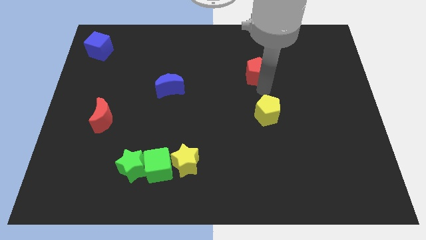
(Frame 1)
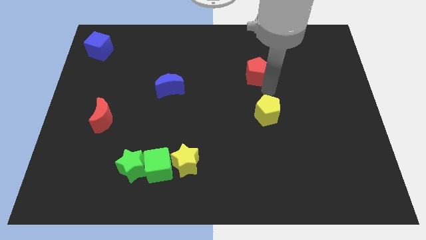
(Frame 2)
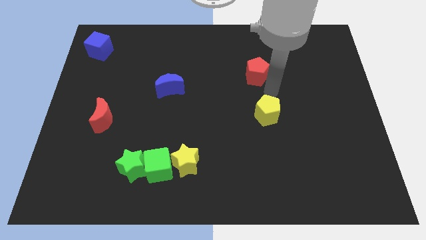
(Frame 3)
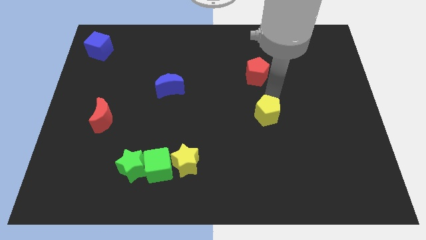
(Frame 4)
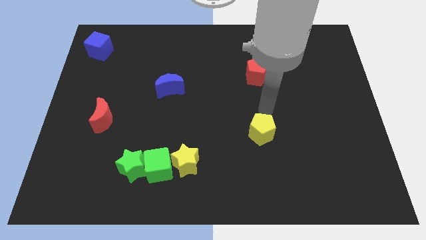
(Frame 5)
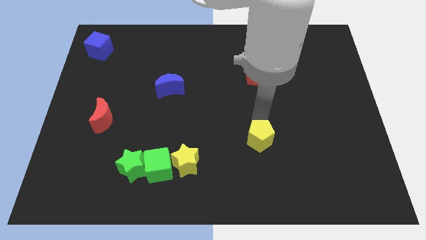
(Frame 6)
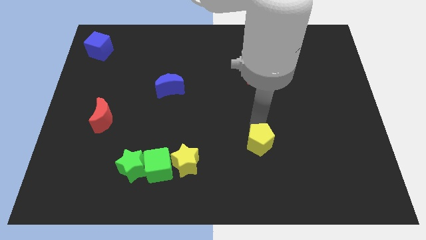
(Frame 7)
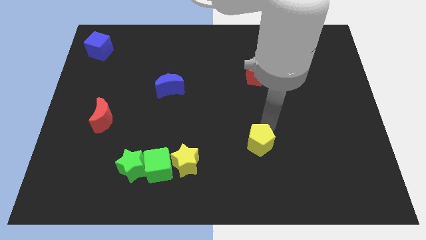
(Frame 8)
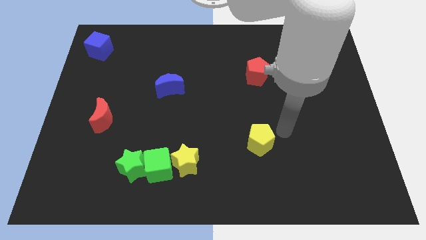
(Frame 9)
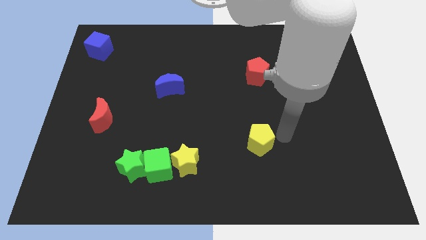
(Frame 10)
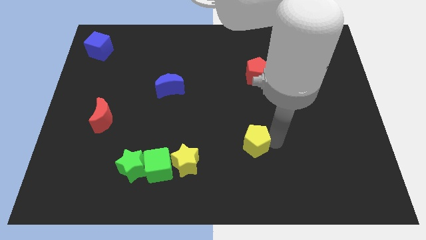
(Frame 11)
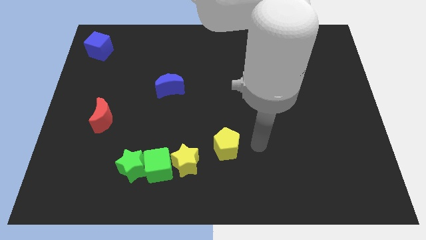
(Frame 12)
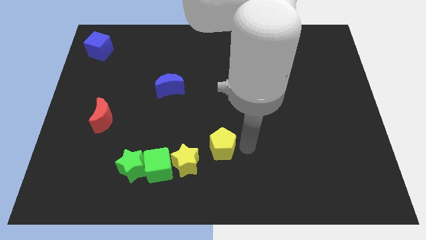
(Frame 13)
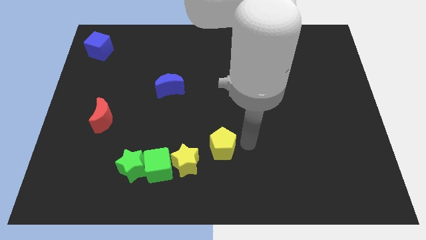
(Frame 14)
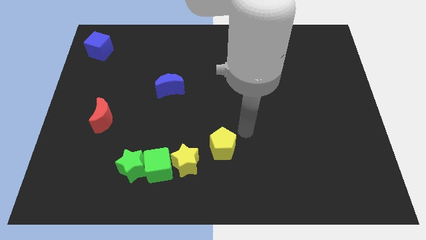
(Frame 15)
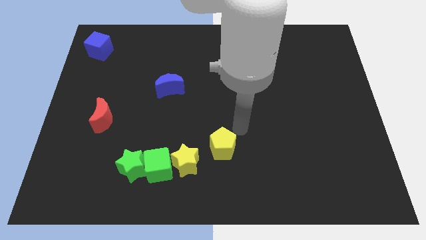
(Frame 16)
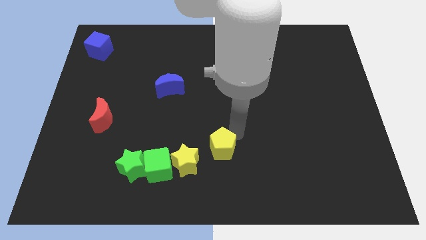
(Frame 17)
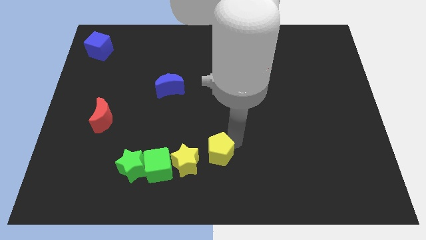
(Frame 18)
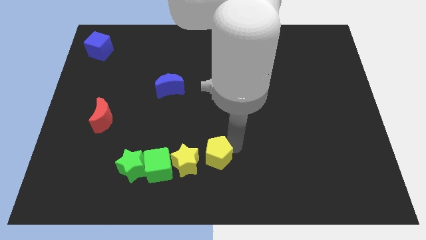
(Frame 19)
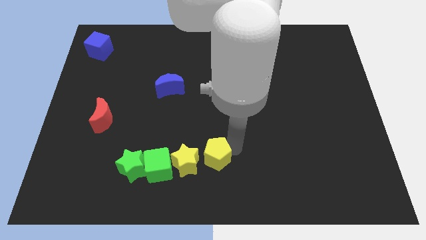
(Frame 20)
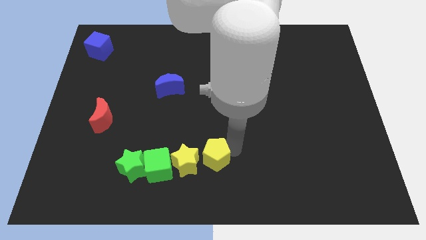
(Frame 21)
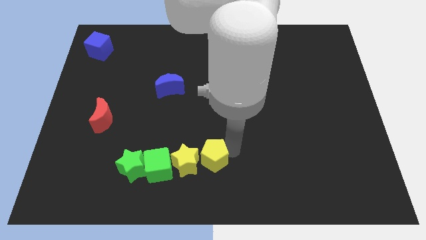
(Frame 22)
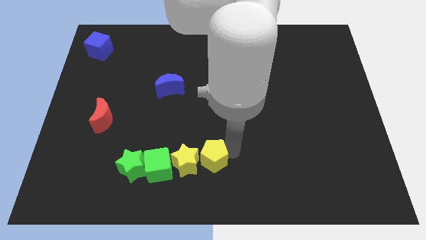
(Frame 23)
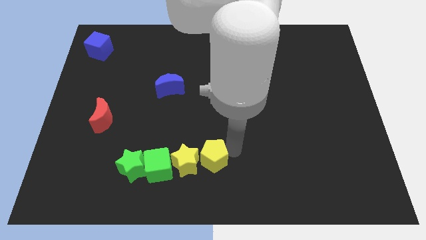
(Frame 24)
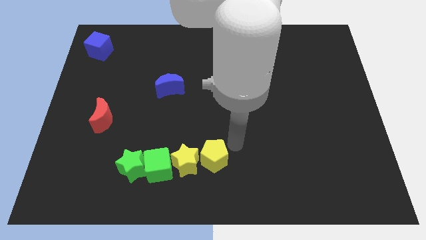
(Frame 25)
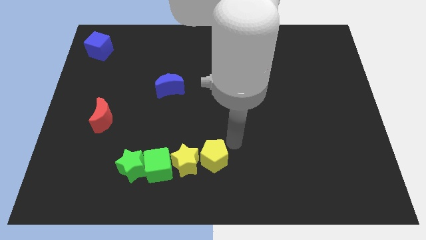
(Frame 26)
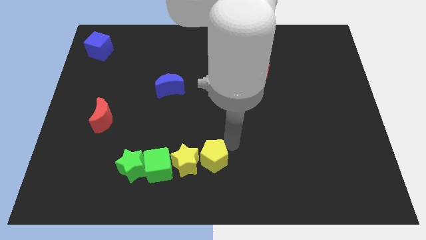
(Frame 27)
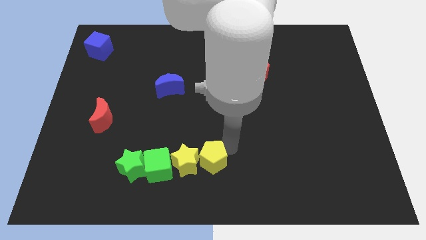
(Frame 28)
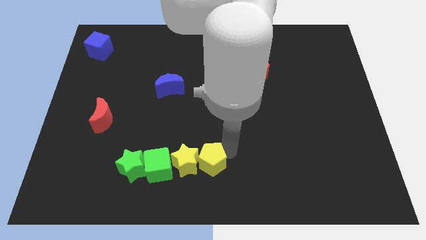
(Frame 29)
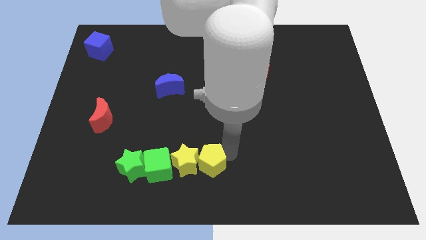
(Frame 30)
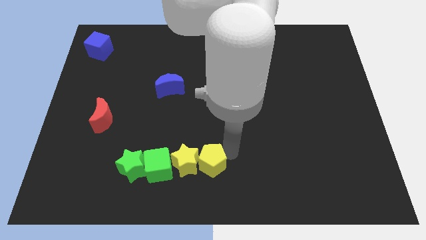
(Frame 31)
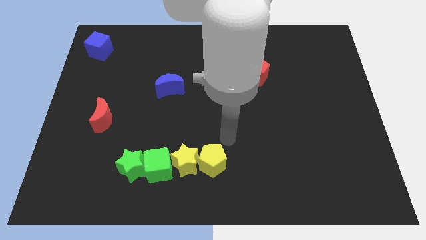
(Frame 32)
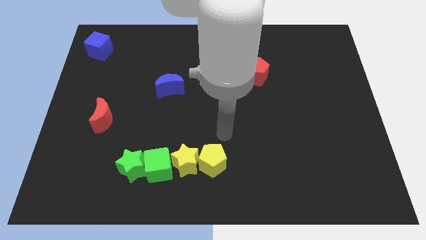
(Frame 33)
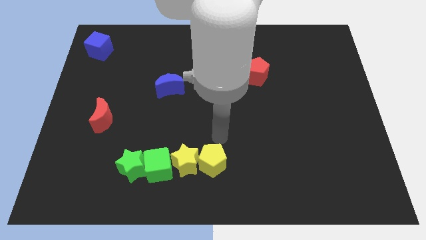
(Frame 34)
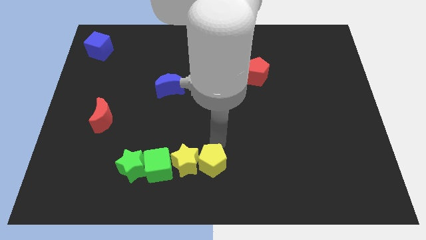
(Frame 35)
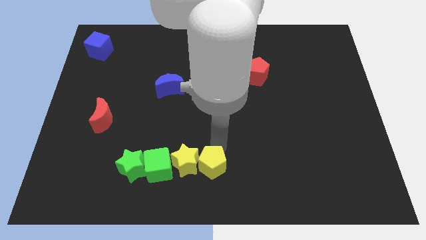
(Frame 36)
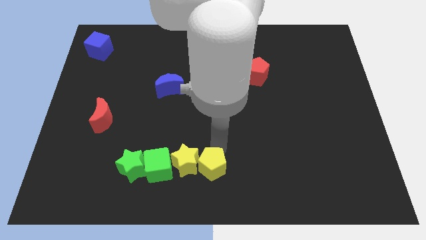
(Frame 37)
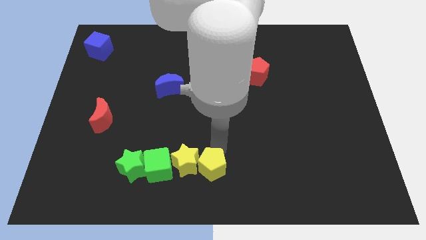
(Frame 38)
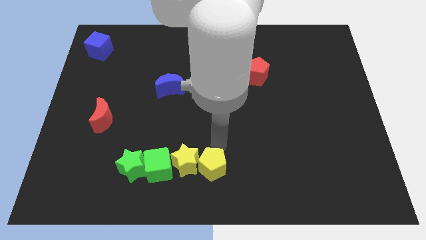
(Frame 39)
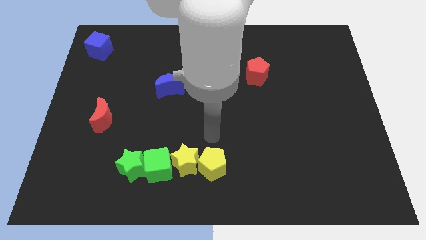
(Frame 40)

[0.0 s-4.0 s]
place the yellow pentagon on right side of yellow star

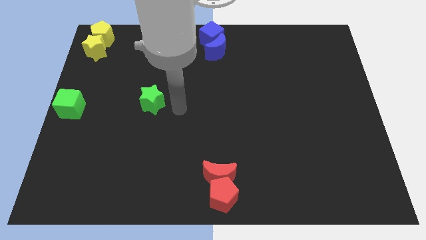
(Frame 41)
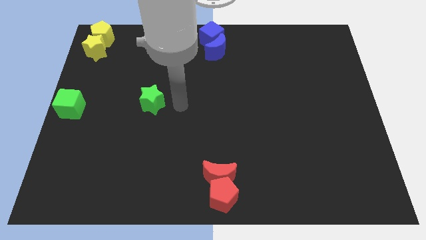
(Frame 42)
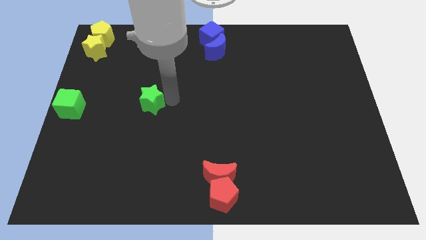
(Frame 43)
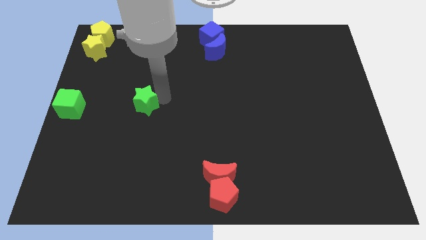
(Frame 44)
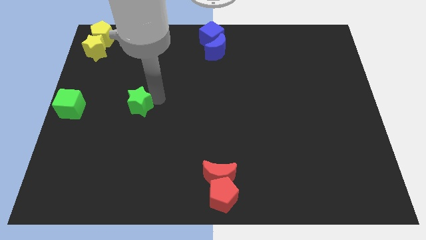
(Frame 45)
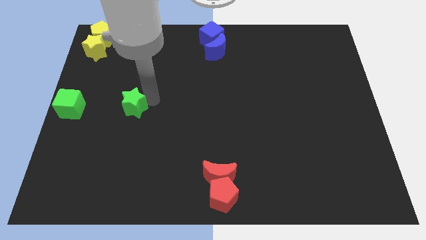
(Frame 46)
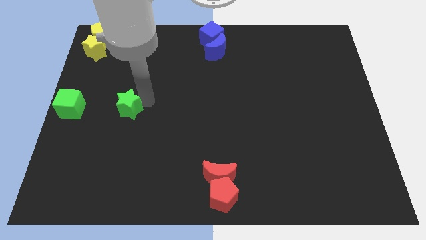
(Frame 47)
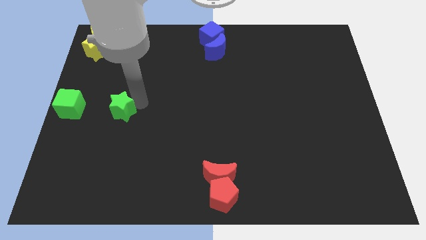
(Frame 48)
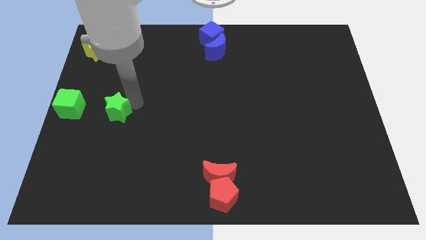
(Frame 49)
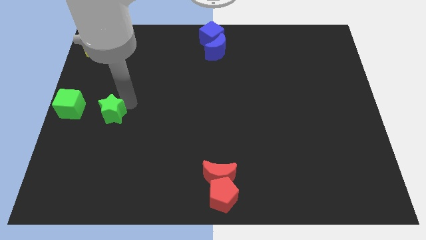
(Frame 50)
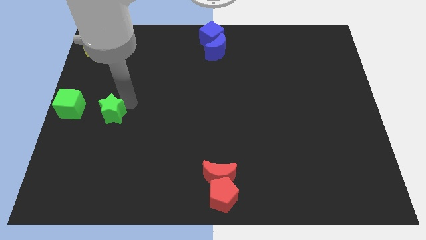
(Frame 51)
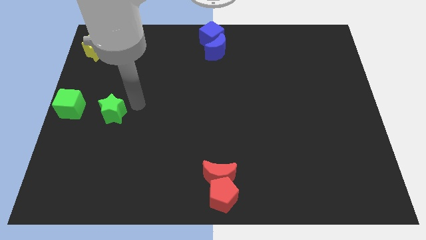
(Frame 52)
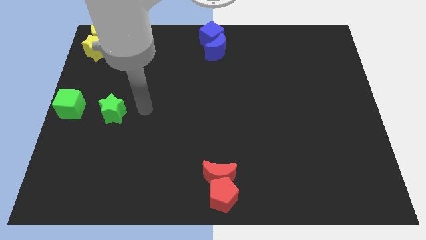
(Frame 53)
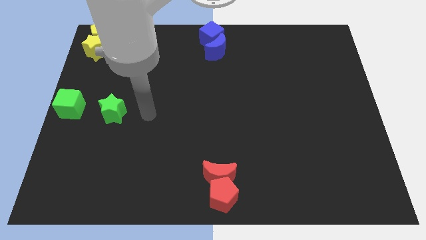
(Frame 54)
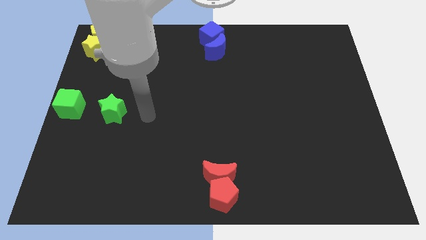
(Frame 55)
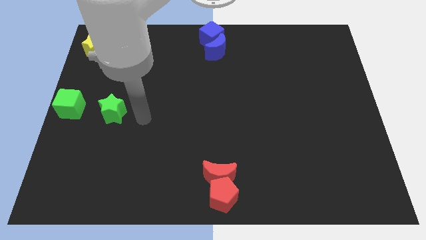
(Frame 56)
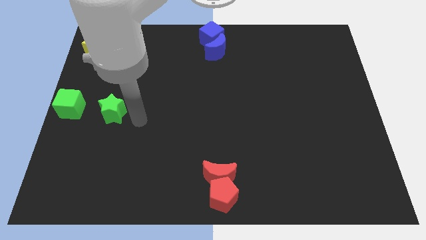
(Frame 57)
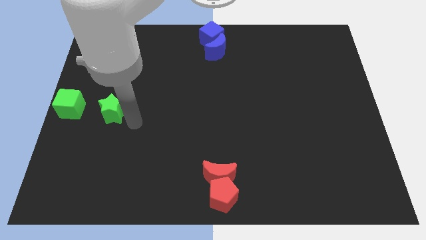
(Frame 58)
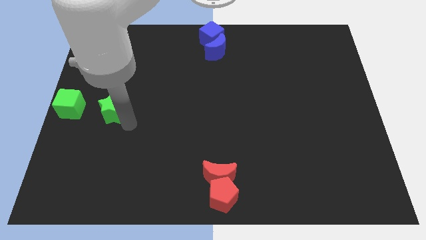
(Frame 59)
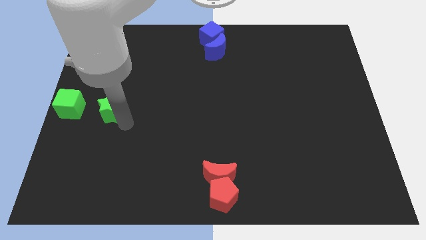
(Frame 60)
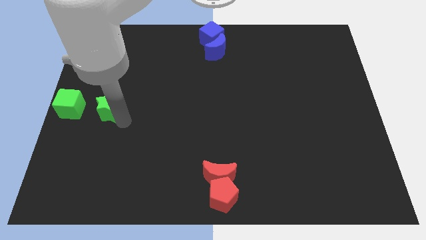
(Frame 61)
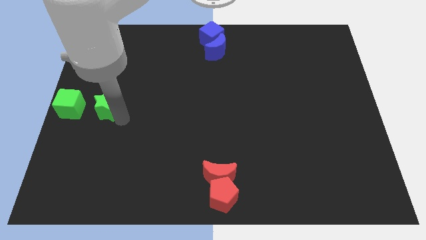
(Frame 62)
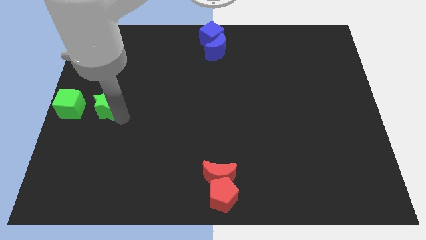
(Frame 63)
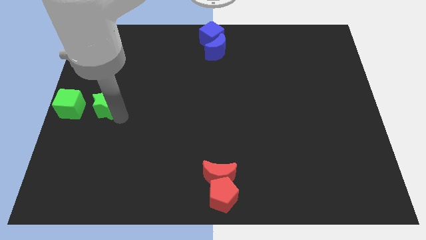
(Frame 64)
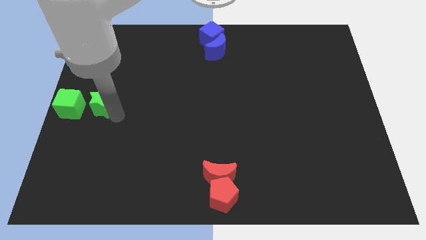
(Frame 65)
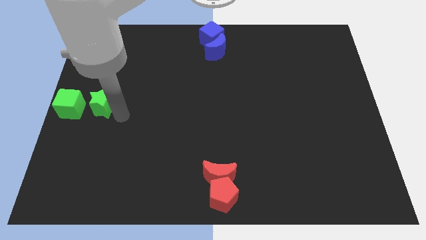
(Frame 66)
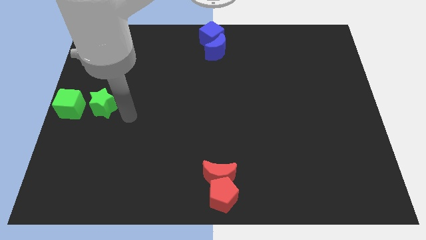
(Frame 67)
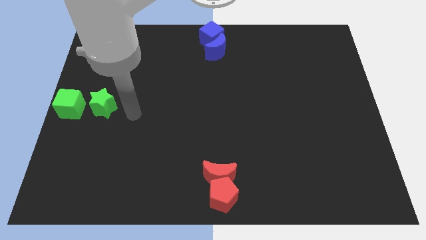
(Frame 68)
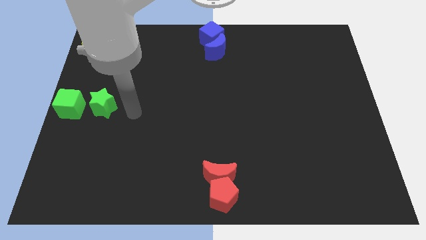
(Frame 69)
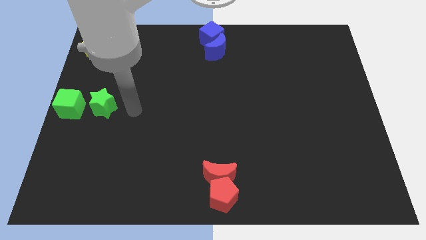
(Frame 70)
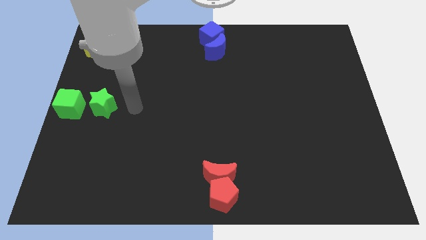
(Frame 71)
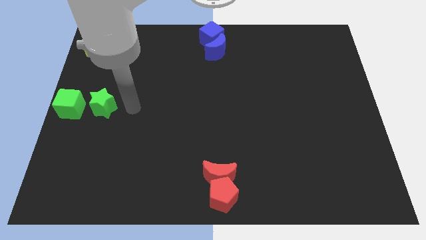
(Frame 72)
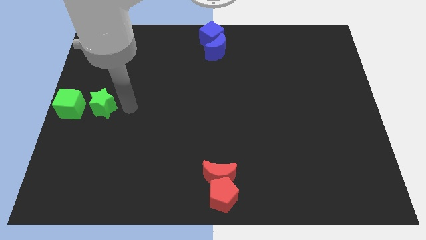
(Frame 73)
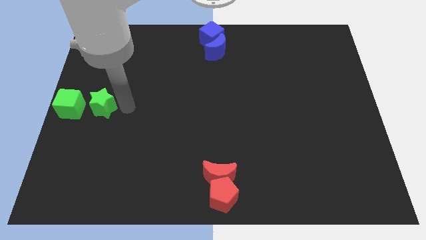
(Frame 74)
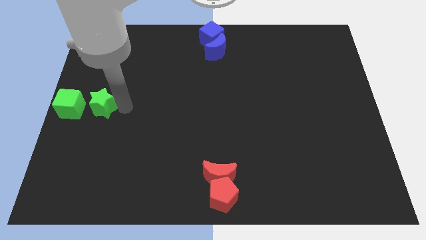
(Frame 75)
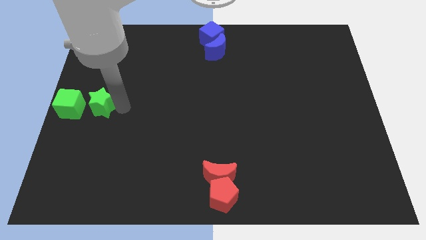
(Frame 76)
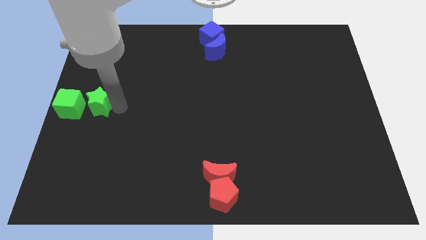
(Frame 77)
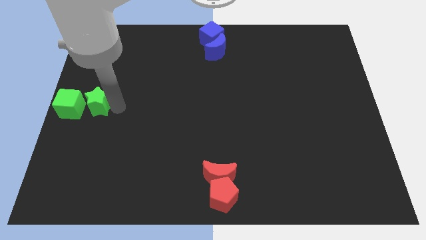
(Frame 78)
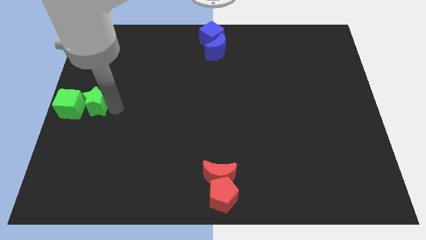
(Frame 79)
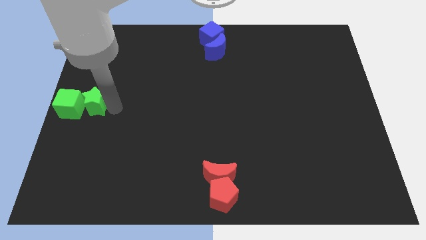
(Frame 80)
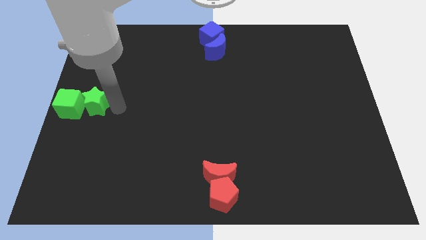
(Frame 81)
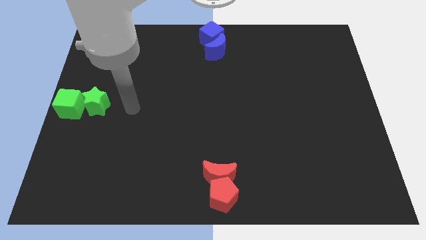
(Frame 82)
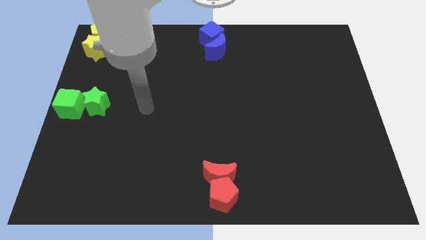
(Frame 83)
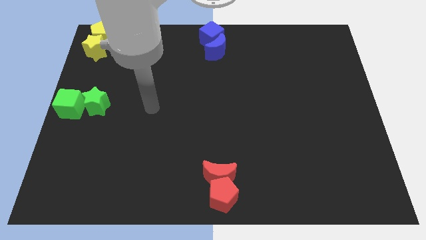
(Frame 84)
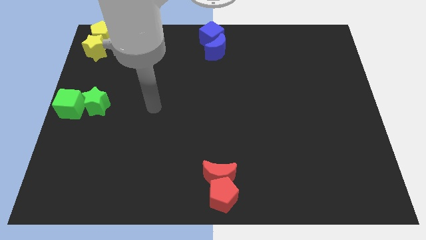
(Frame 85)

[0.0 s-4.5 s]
move the green star horizontal to the right of green cube

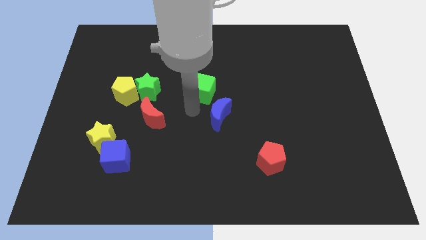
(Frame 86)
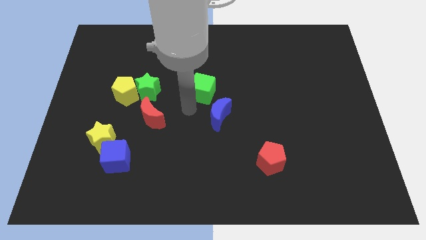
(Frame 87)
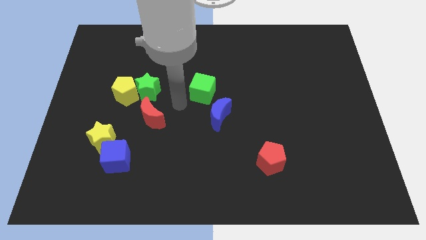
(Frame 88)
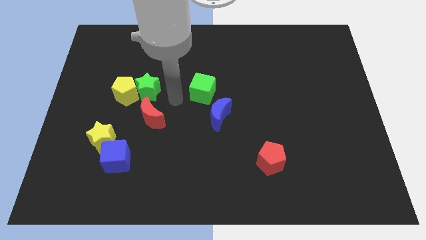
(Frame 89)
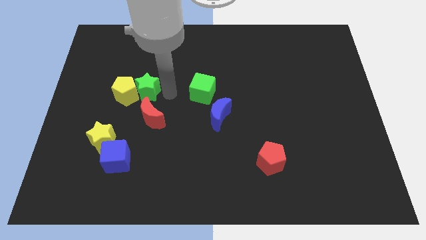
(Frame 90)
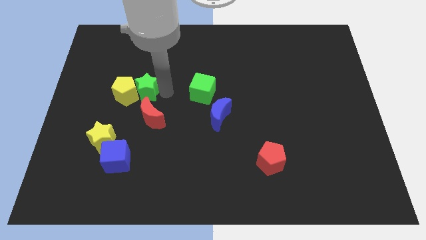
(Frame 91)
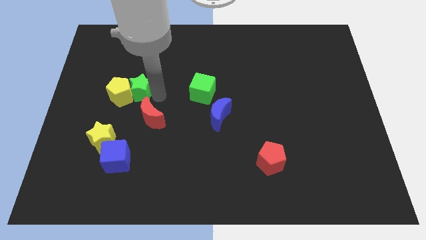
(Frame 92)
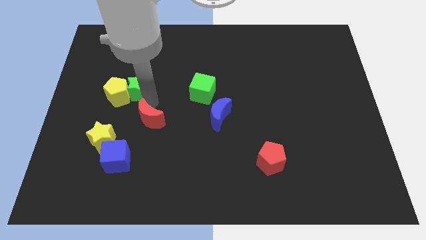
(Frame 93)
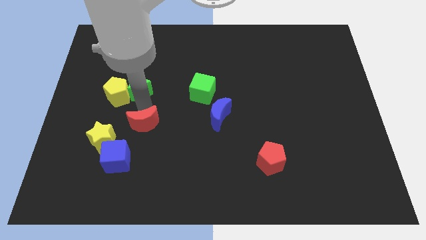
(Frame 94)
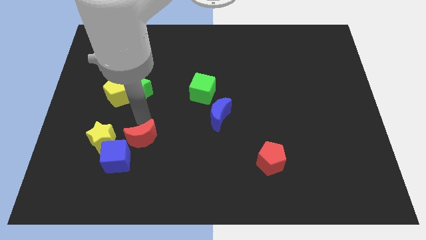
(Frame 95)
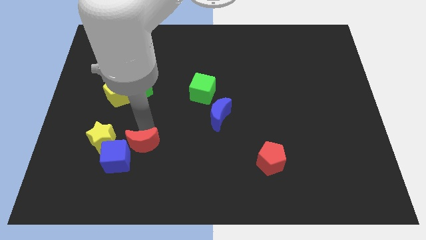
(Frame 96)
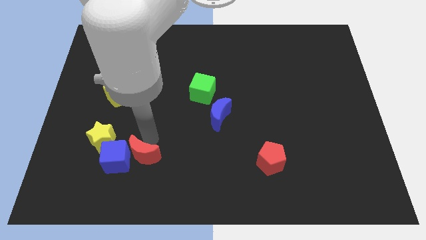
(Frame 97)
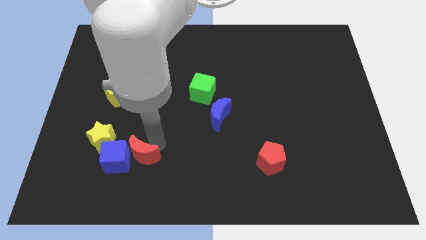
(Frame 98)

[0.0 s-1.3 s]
separate the red crescent from the green star
